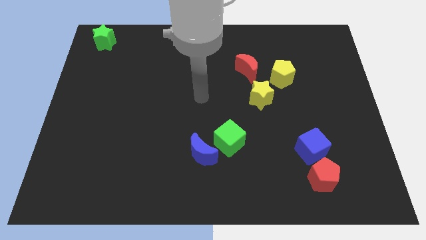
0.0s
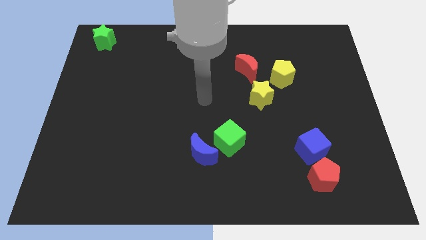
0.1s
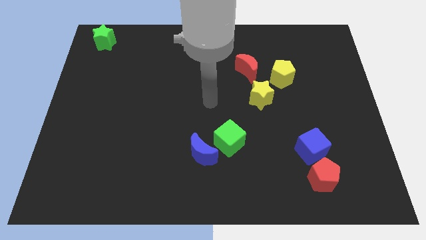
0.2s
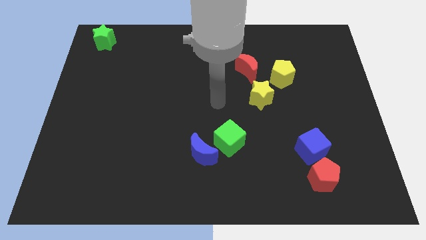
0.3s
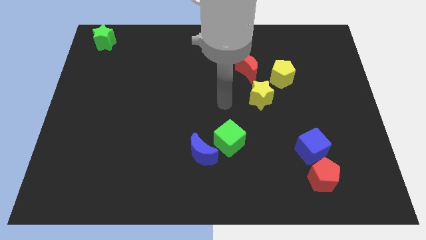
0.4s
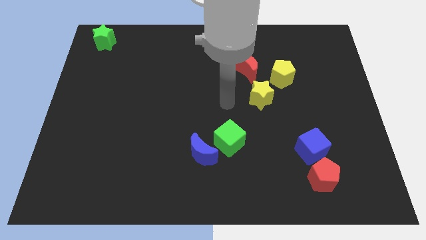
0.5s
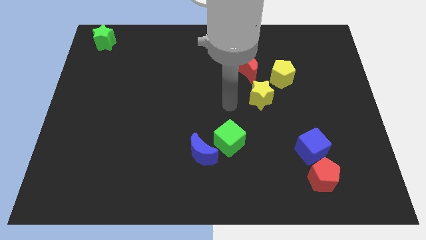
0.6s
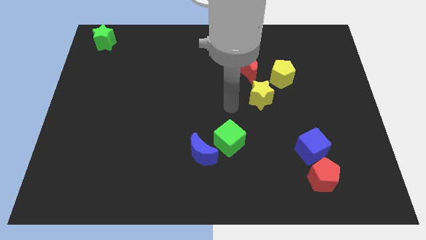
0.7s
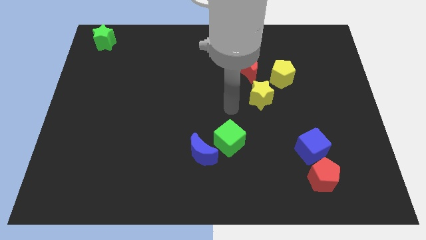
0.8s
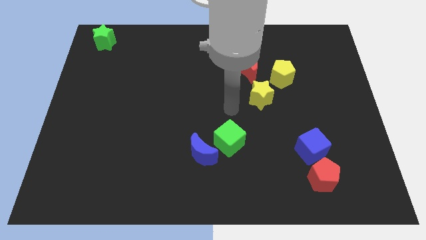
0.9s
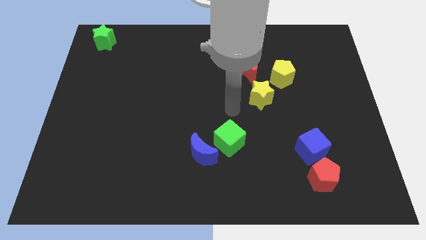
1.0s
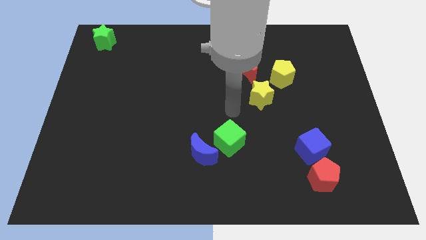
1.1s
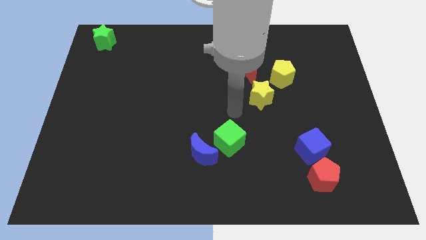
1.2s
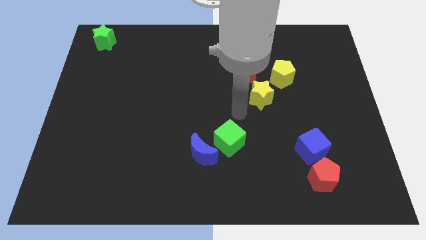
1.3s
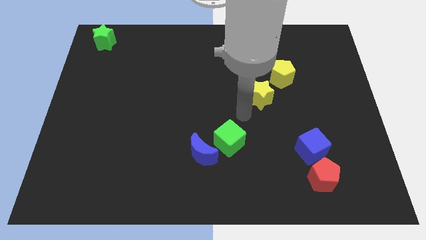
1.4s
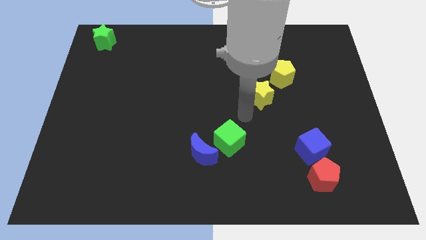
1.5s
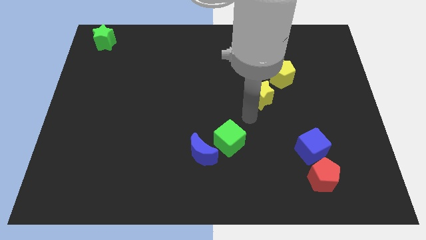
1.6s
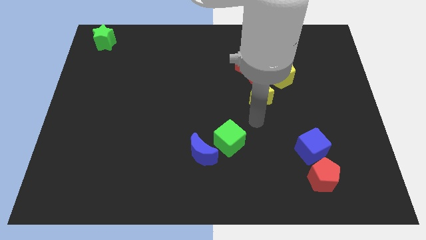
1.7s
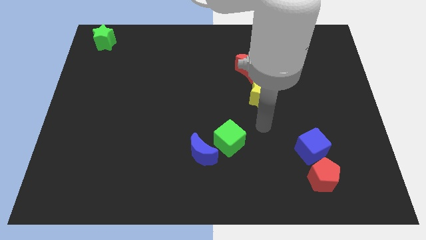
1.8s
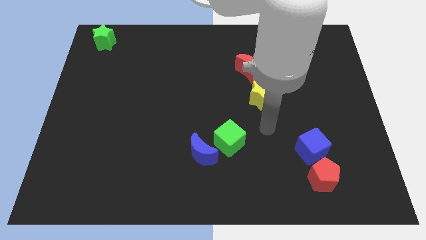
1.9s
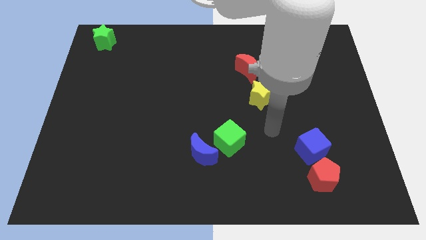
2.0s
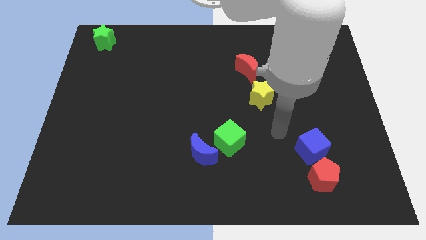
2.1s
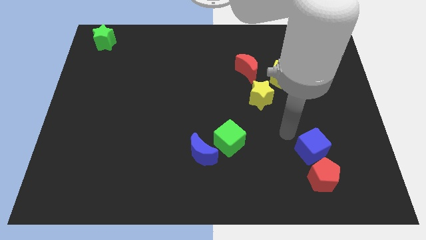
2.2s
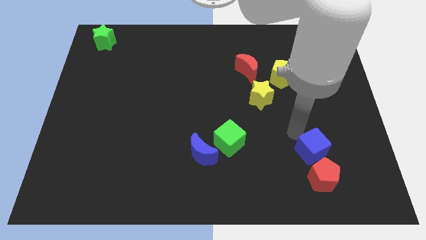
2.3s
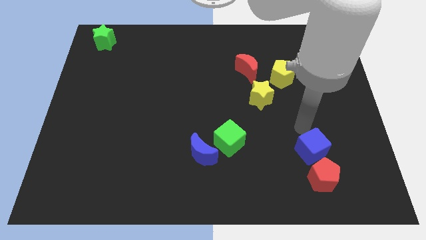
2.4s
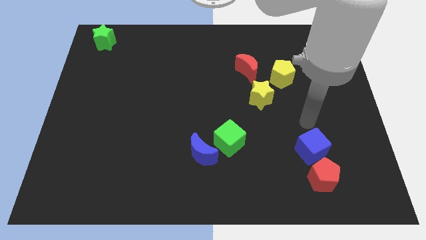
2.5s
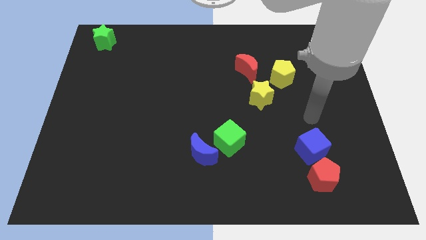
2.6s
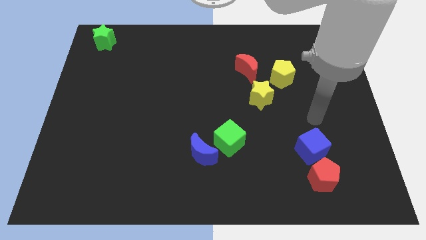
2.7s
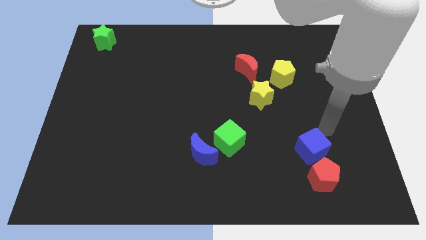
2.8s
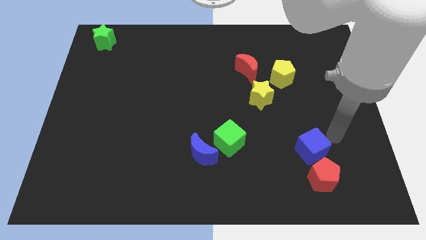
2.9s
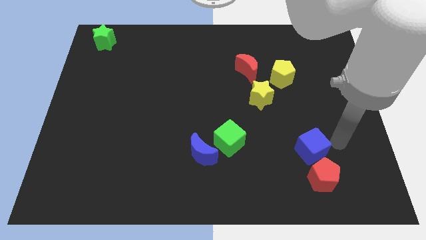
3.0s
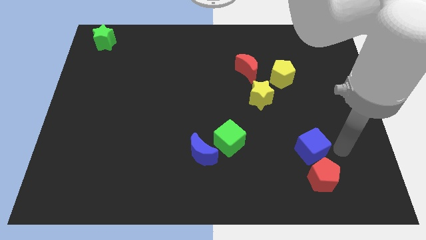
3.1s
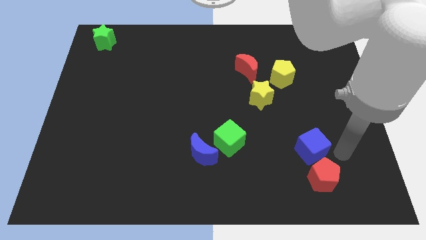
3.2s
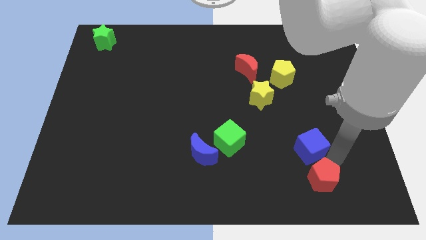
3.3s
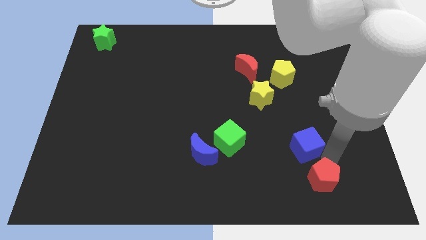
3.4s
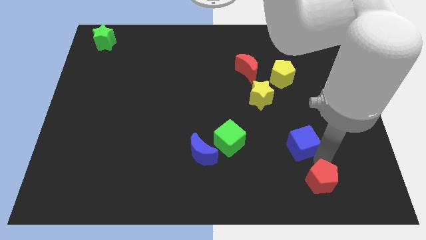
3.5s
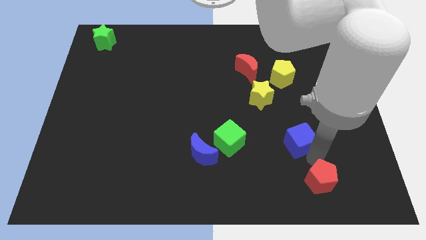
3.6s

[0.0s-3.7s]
separate the blue cube from the red pentagon

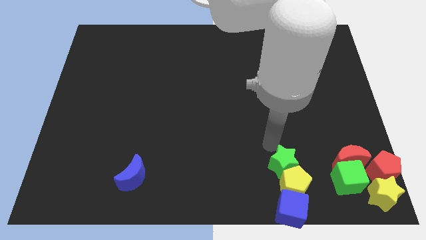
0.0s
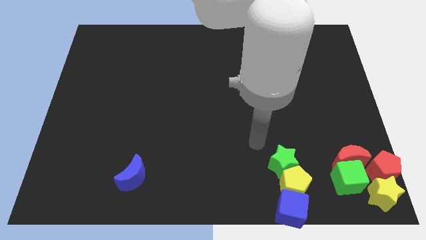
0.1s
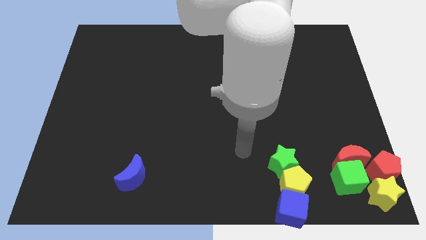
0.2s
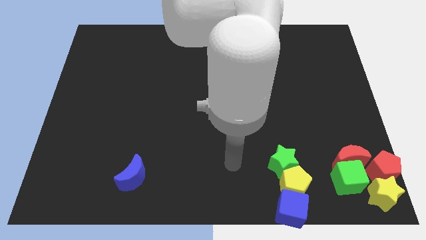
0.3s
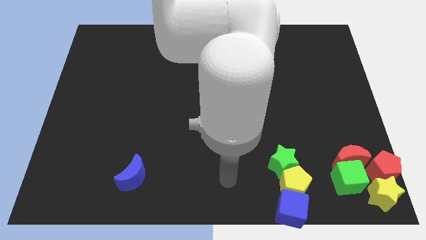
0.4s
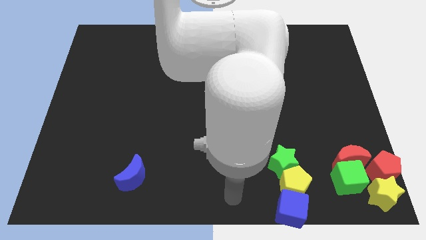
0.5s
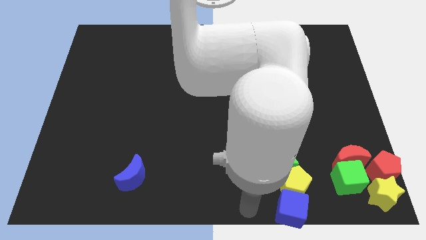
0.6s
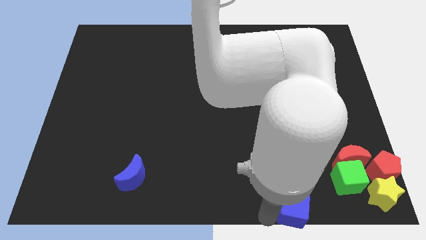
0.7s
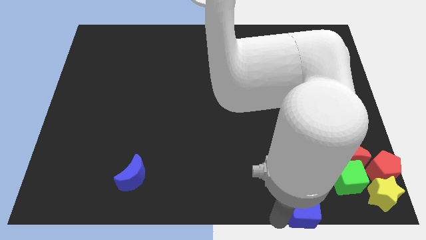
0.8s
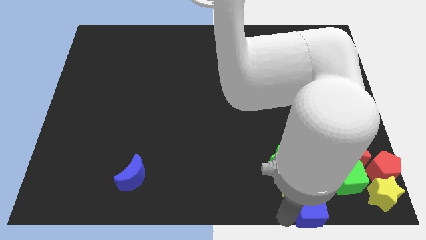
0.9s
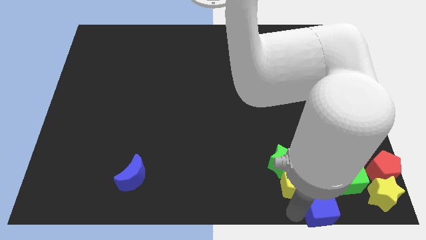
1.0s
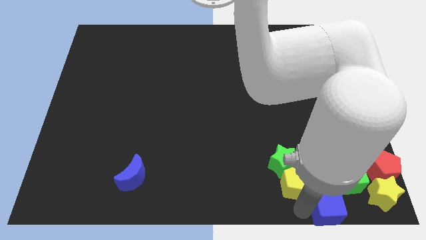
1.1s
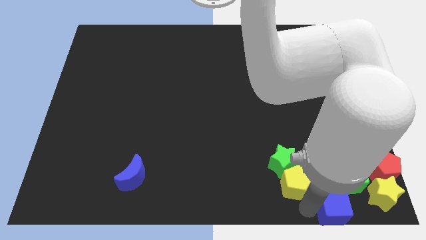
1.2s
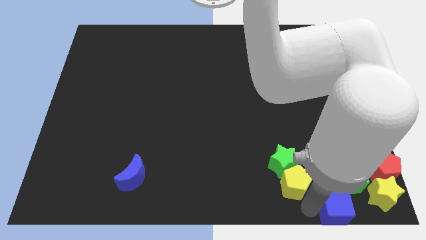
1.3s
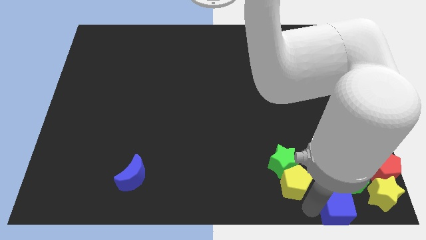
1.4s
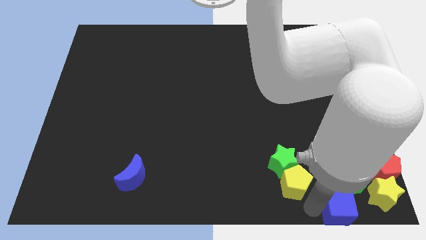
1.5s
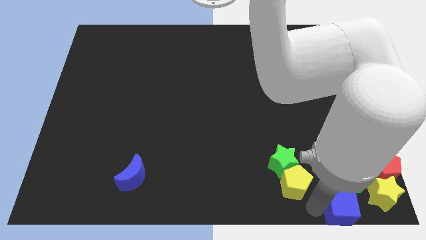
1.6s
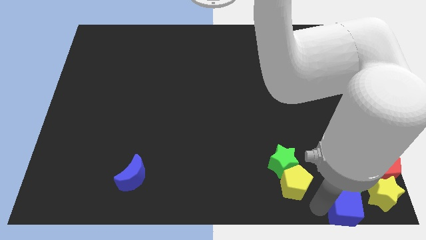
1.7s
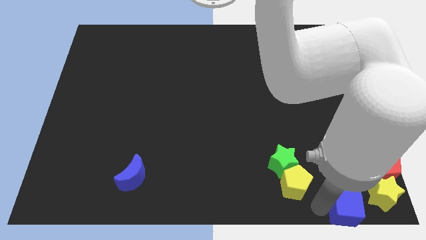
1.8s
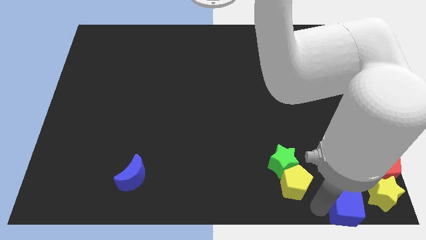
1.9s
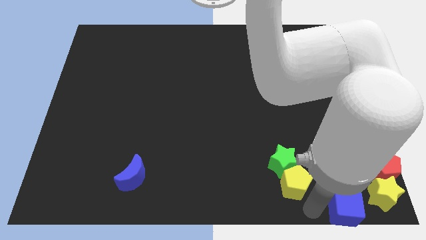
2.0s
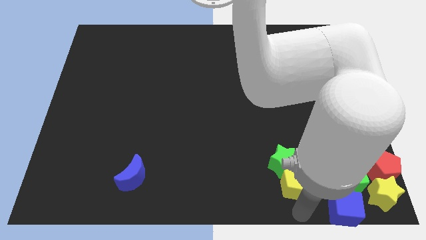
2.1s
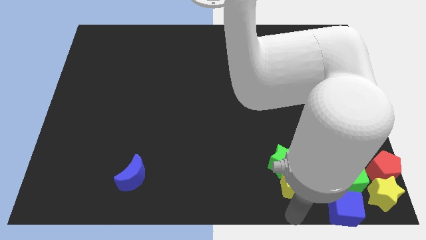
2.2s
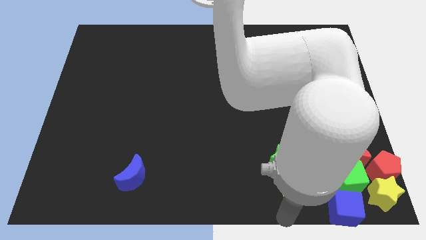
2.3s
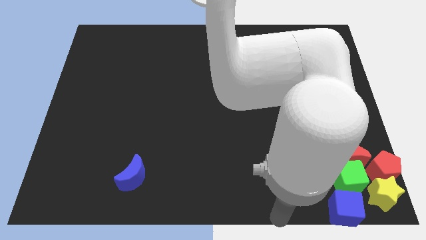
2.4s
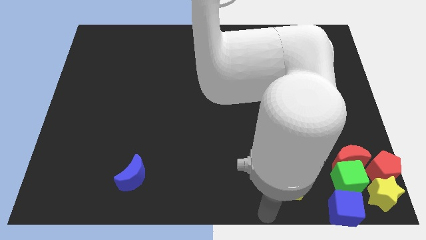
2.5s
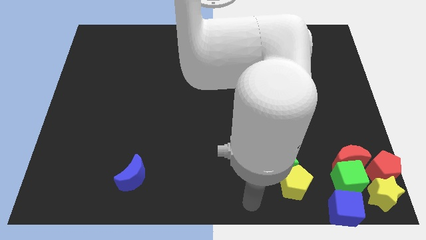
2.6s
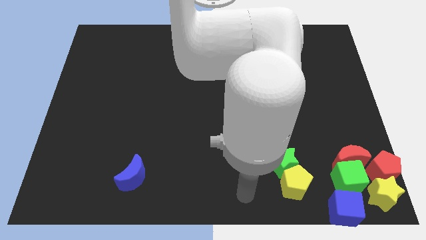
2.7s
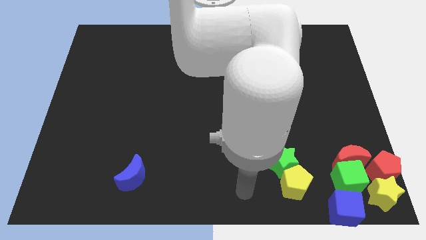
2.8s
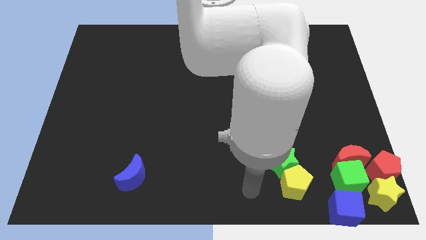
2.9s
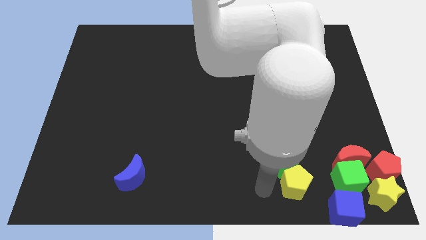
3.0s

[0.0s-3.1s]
move the blue cube below the green cube

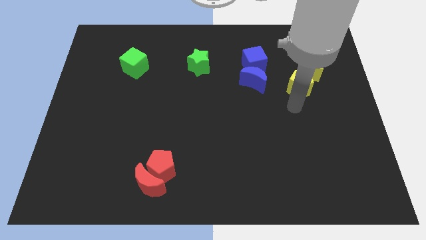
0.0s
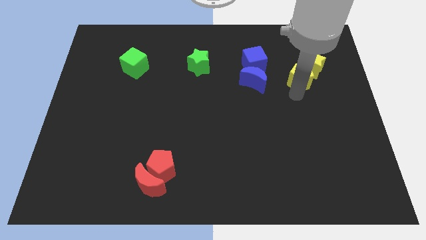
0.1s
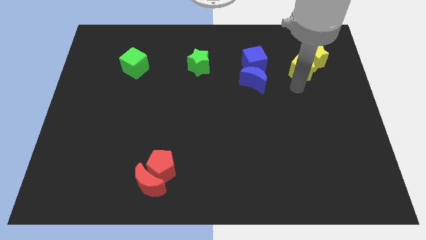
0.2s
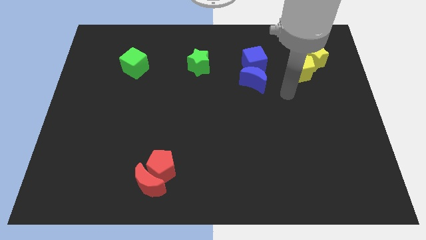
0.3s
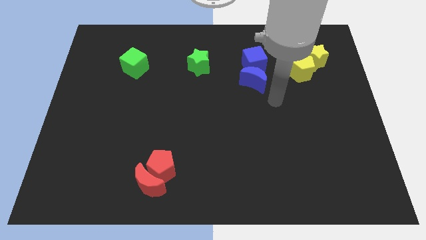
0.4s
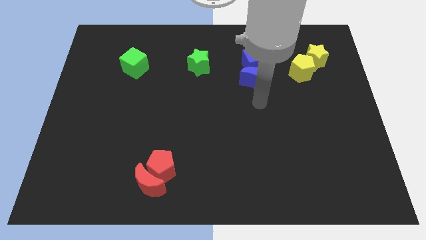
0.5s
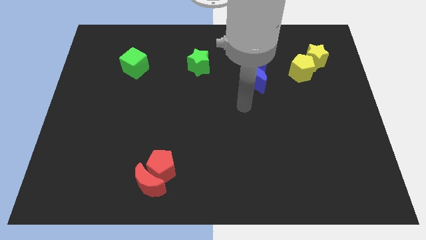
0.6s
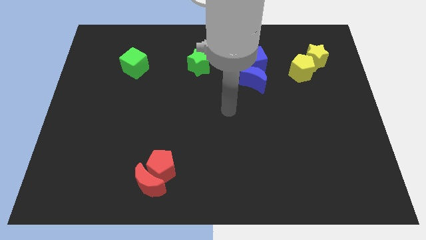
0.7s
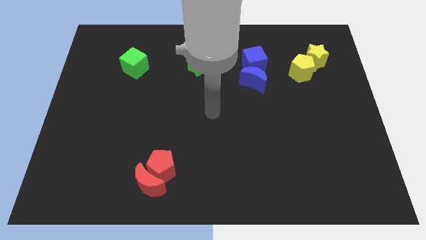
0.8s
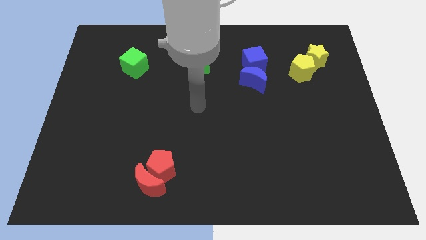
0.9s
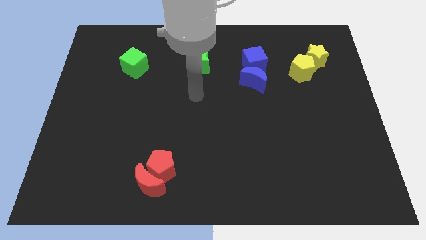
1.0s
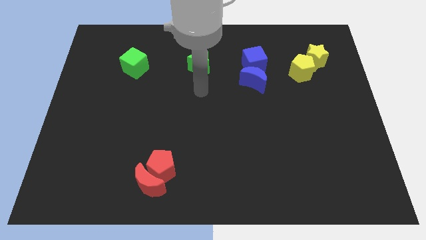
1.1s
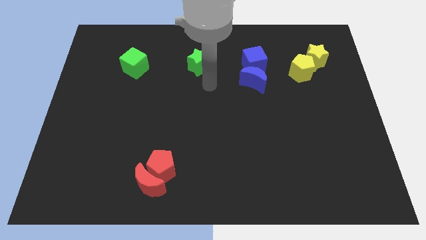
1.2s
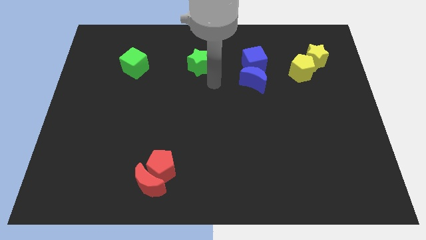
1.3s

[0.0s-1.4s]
move the yellow pentagon diagonally to the yellow star

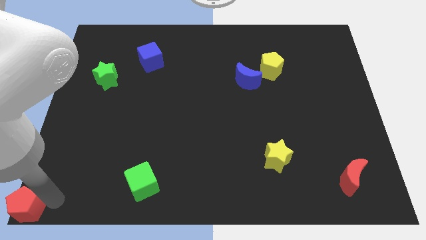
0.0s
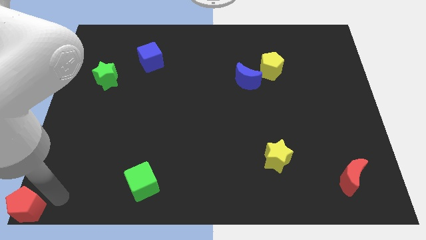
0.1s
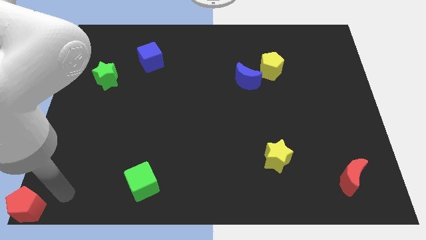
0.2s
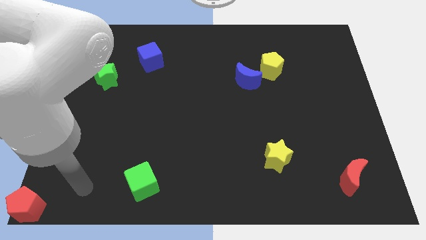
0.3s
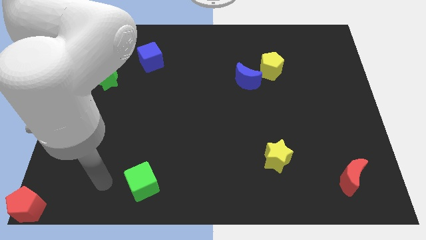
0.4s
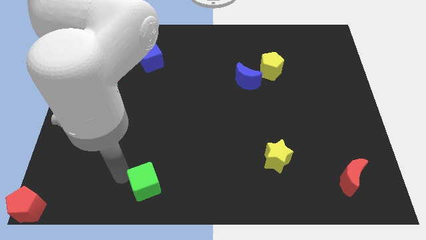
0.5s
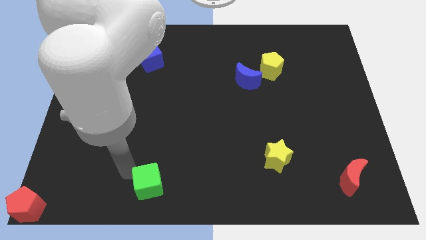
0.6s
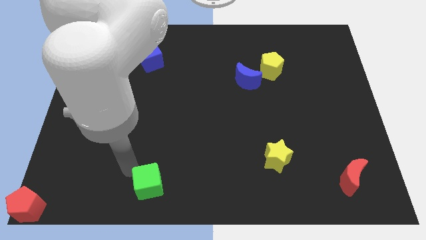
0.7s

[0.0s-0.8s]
slightly push the green cube towards the center of the board

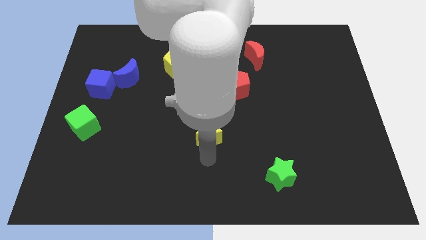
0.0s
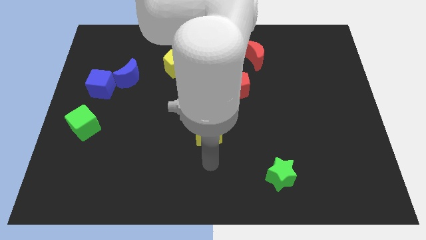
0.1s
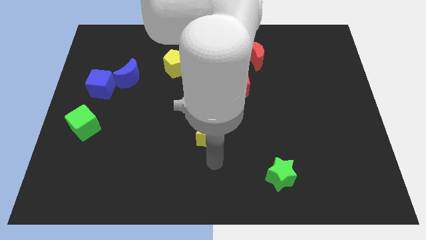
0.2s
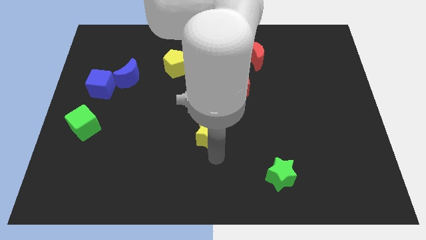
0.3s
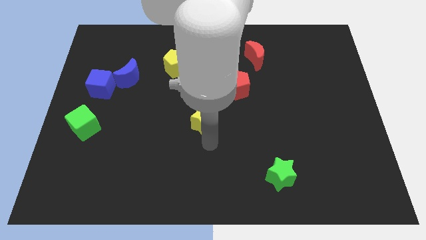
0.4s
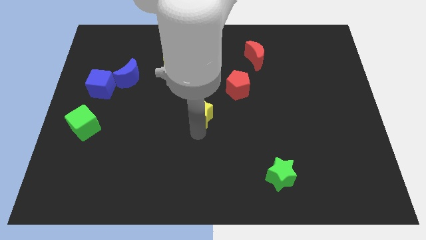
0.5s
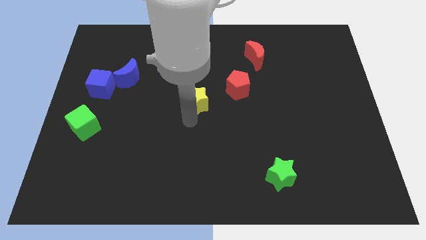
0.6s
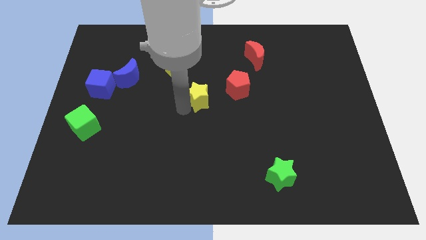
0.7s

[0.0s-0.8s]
move the yellow star to the center of the board
